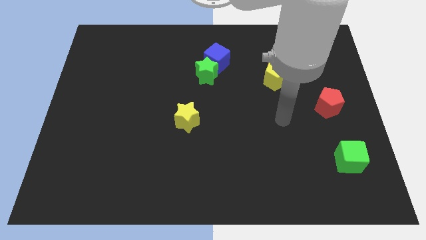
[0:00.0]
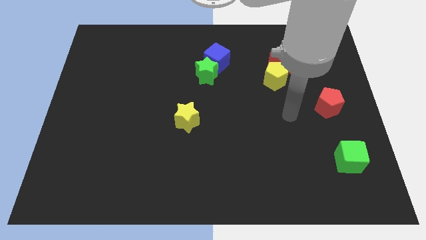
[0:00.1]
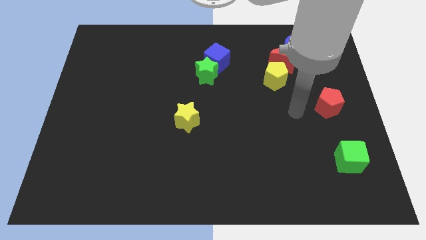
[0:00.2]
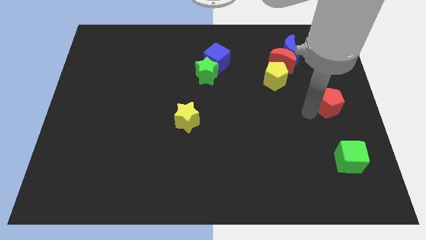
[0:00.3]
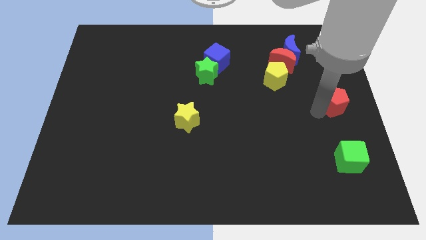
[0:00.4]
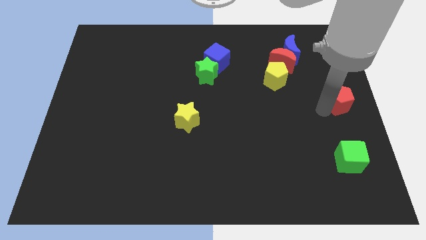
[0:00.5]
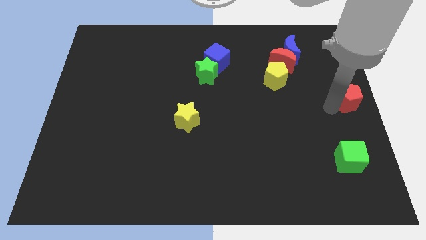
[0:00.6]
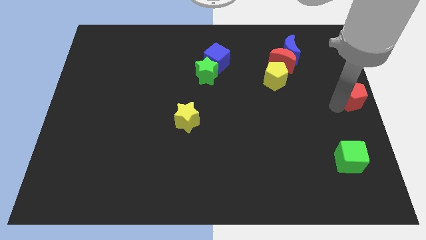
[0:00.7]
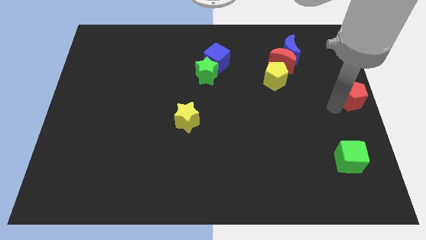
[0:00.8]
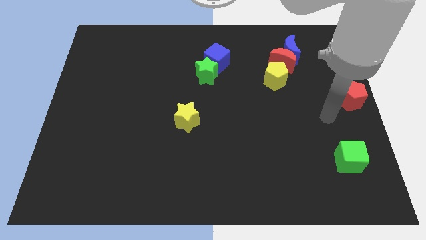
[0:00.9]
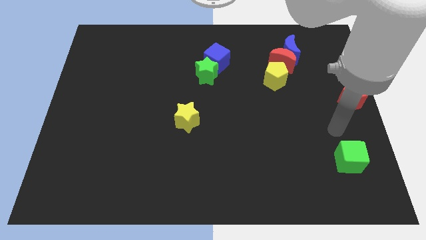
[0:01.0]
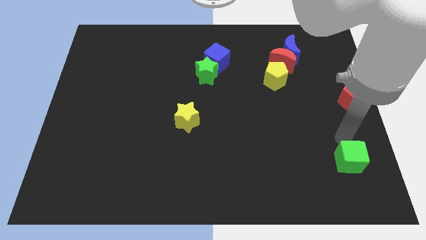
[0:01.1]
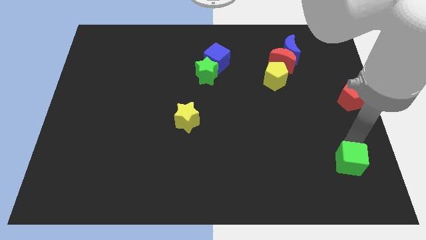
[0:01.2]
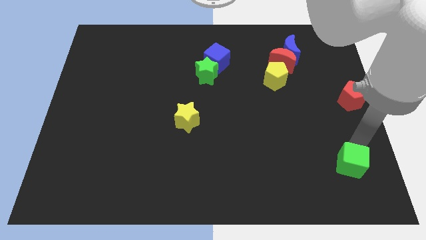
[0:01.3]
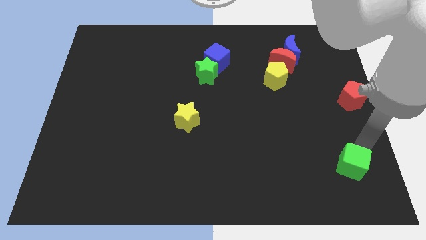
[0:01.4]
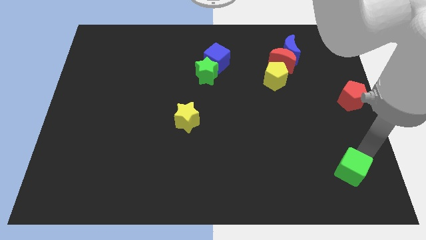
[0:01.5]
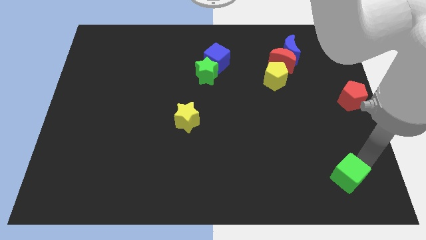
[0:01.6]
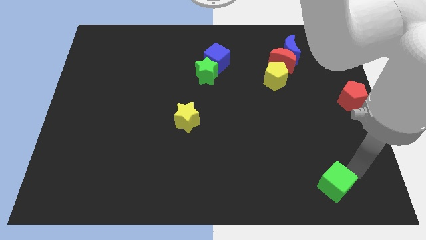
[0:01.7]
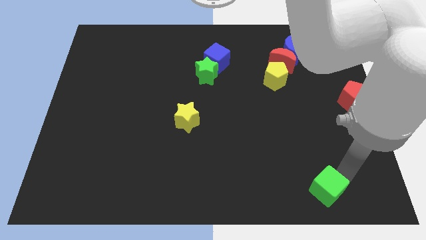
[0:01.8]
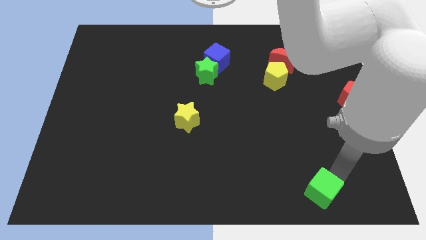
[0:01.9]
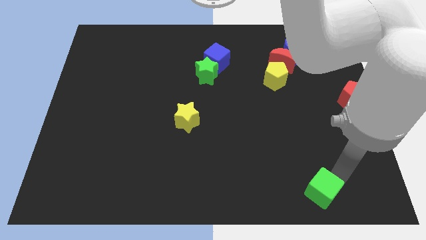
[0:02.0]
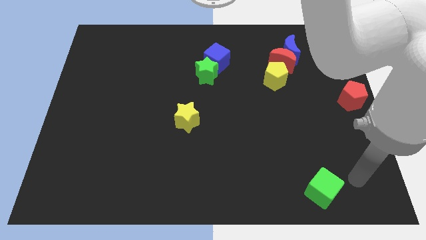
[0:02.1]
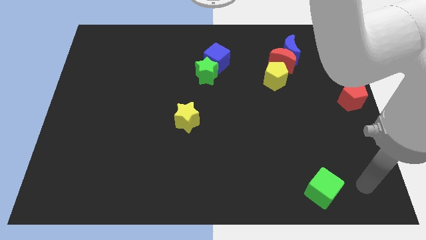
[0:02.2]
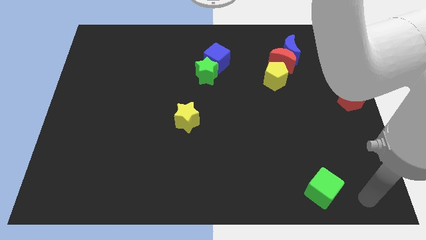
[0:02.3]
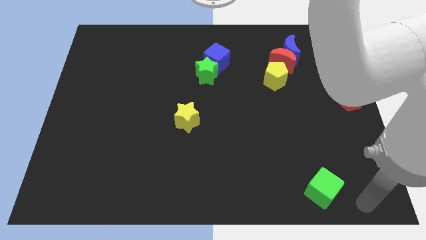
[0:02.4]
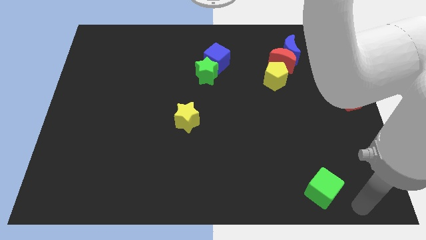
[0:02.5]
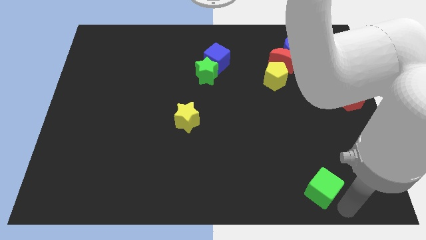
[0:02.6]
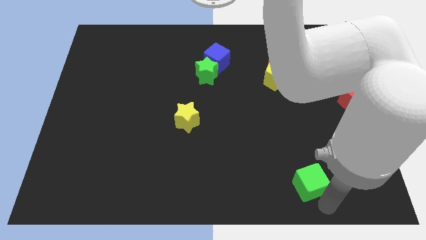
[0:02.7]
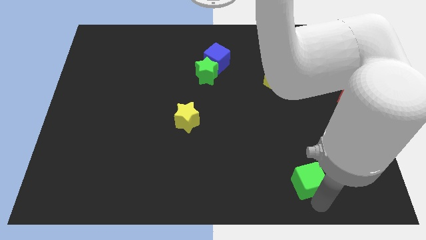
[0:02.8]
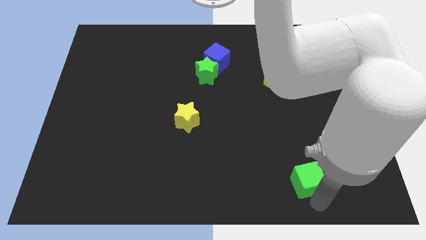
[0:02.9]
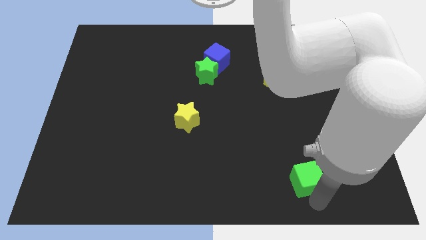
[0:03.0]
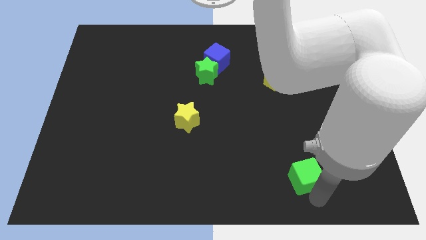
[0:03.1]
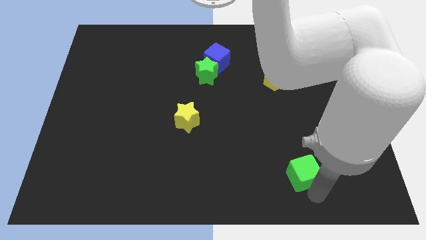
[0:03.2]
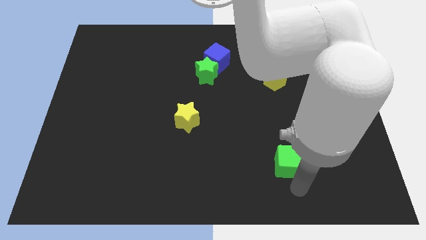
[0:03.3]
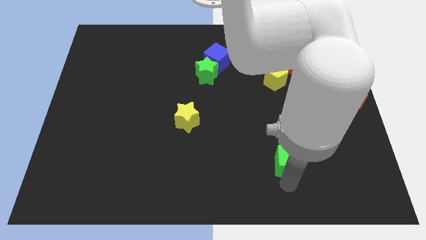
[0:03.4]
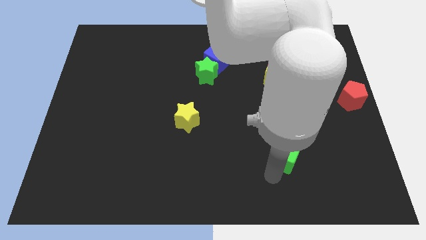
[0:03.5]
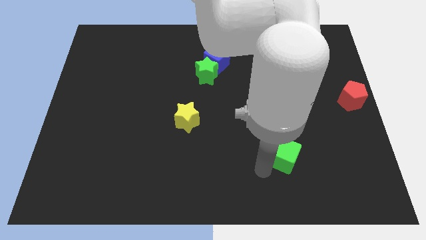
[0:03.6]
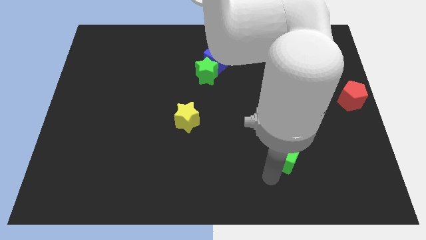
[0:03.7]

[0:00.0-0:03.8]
place the green cube diagonal to the yellow star

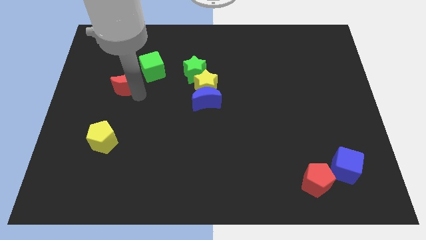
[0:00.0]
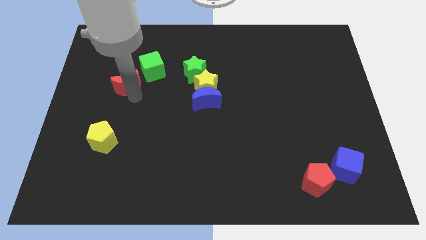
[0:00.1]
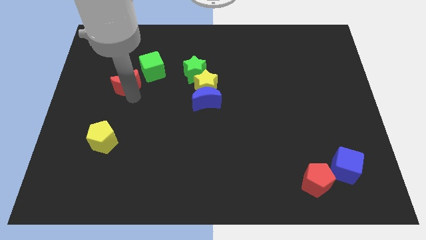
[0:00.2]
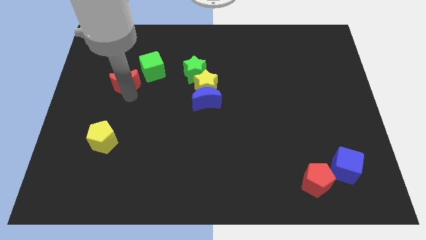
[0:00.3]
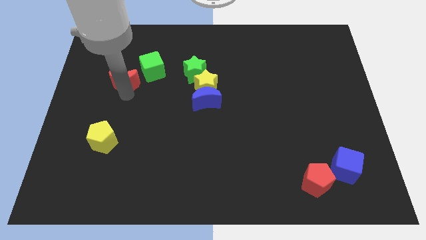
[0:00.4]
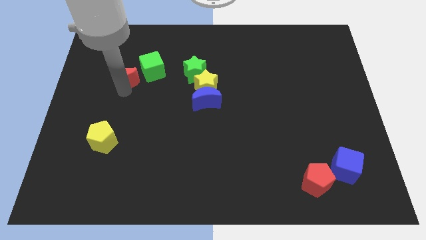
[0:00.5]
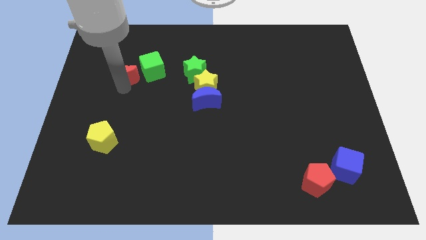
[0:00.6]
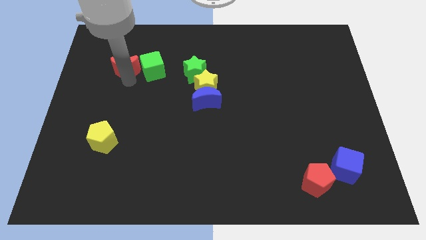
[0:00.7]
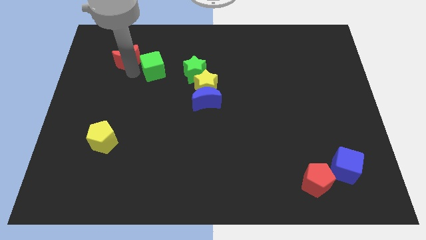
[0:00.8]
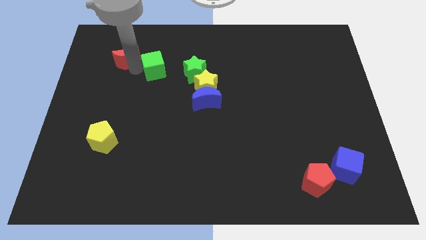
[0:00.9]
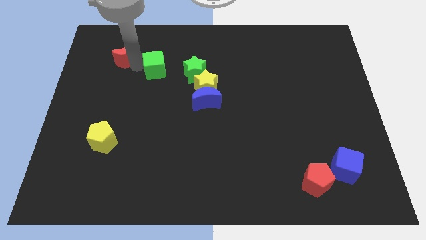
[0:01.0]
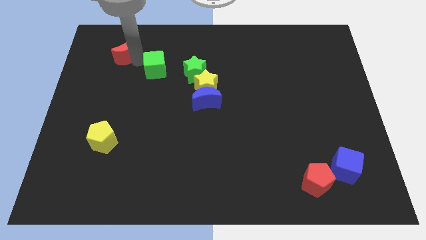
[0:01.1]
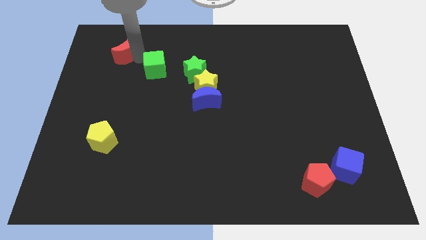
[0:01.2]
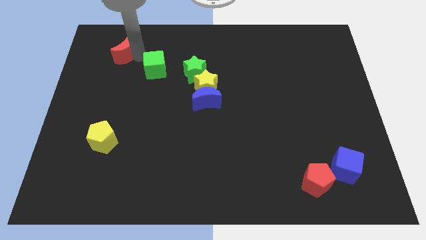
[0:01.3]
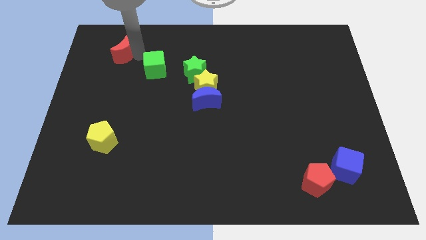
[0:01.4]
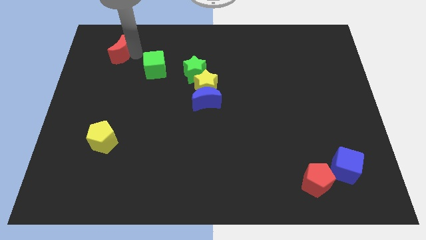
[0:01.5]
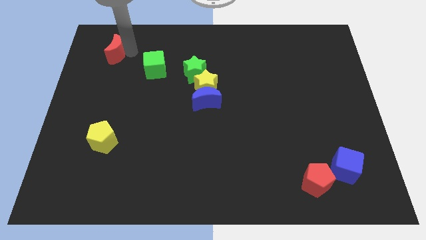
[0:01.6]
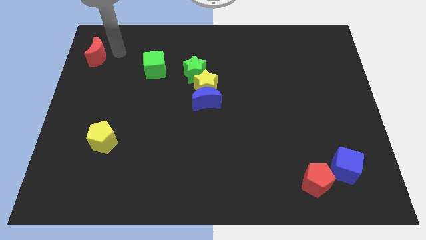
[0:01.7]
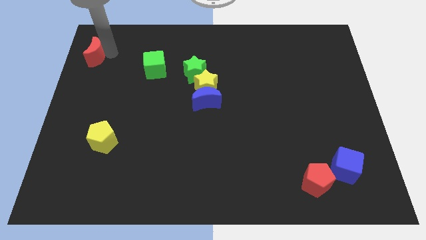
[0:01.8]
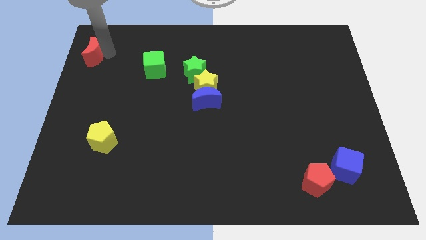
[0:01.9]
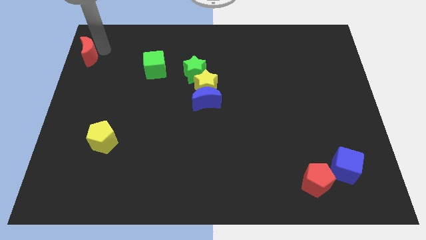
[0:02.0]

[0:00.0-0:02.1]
place the red crescent to the left green cube

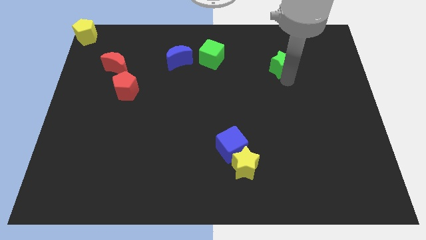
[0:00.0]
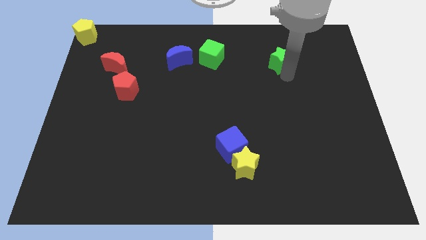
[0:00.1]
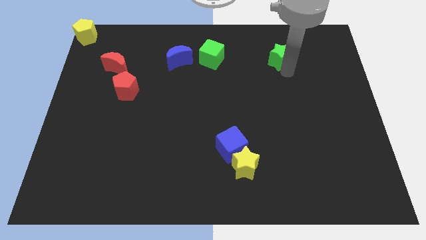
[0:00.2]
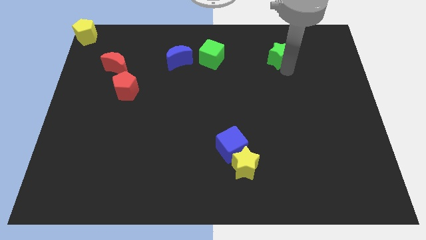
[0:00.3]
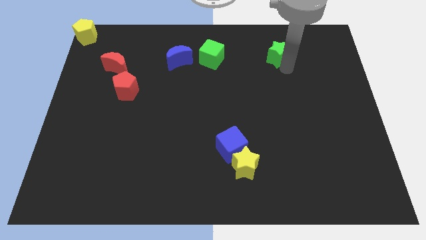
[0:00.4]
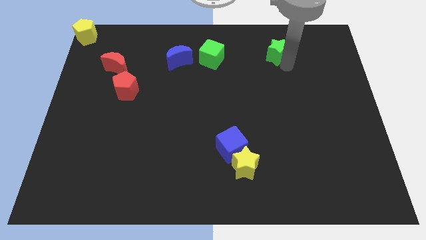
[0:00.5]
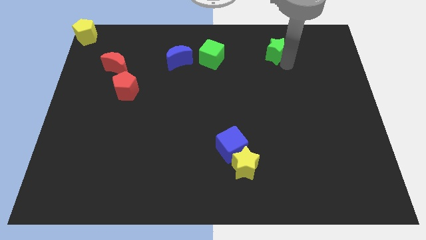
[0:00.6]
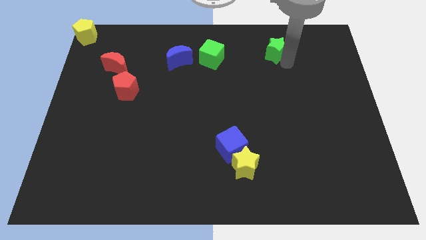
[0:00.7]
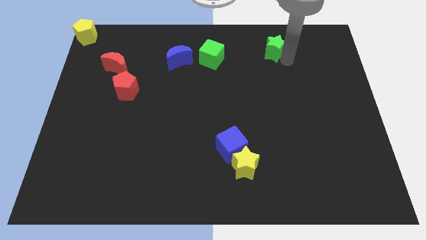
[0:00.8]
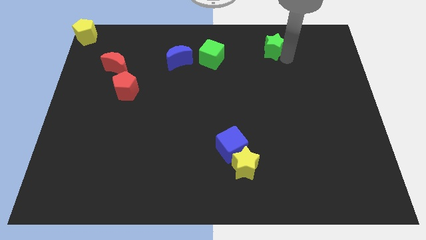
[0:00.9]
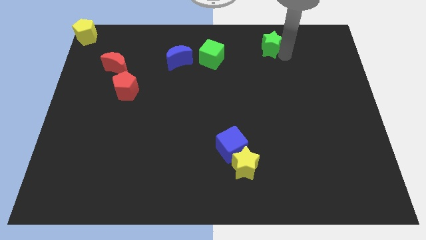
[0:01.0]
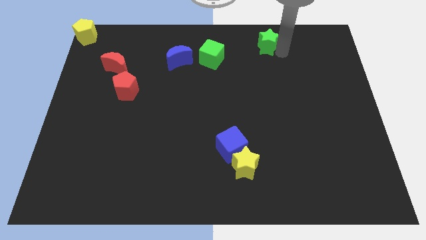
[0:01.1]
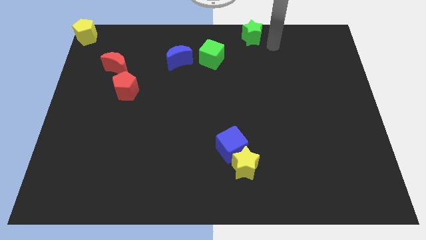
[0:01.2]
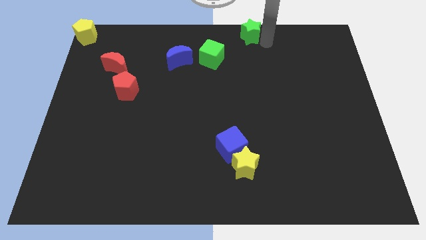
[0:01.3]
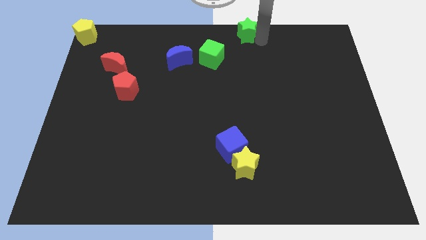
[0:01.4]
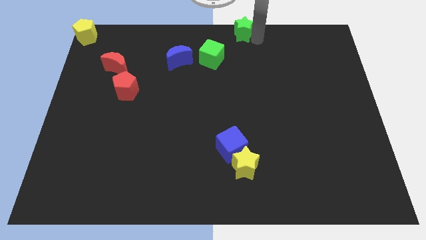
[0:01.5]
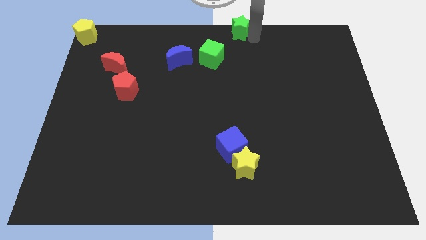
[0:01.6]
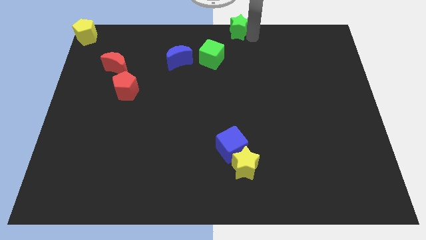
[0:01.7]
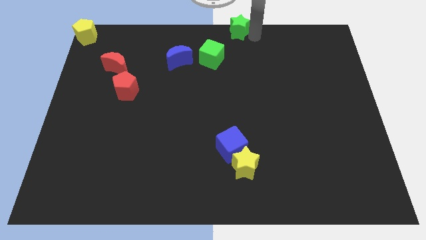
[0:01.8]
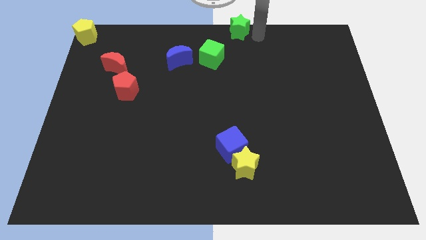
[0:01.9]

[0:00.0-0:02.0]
push green star towards top middle of the board

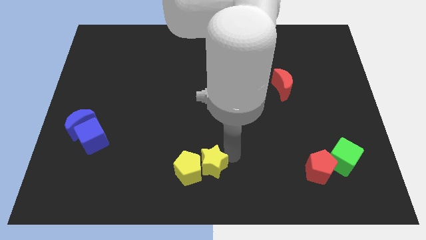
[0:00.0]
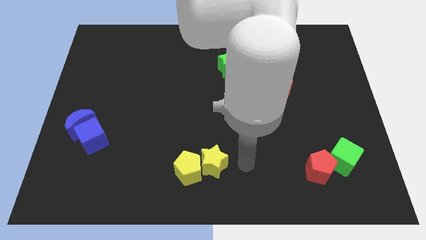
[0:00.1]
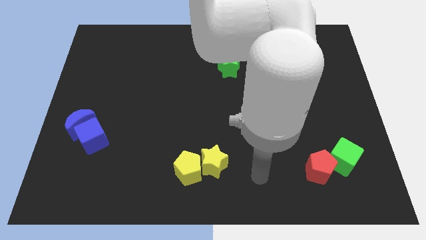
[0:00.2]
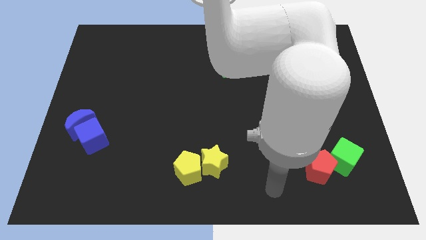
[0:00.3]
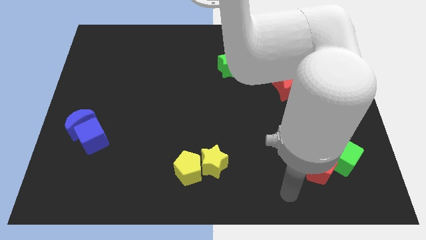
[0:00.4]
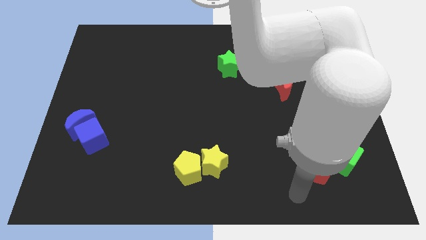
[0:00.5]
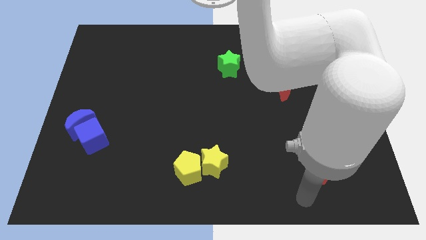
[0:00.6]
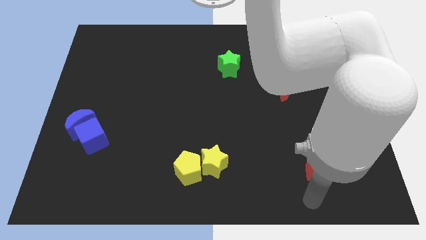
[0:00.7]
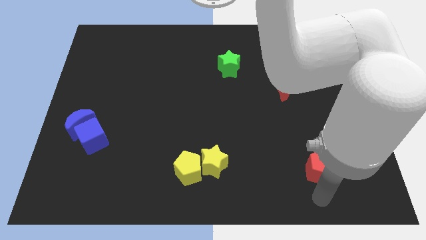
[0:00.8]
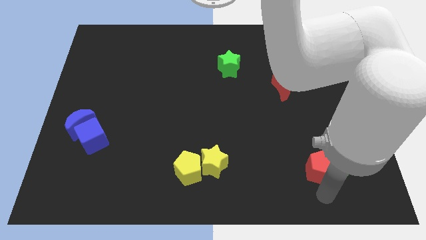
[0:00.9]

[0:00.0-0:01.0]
place your arm at the bottom of the red pentagon

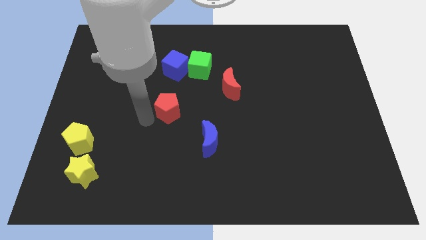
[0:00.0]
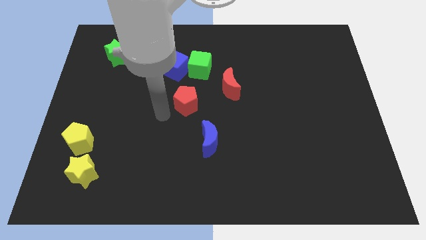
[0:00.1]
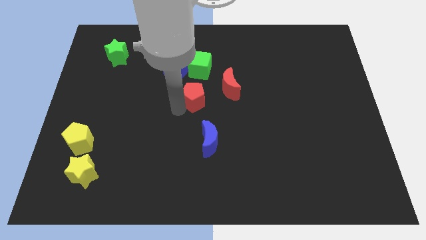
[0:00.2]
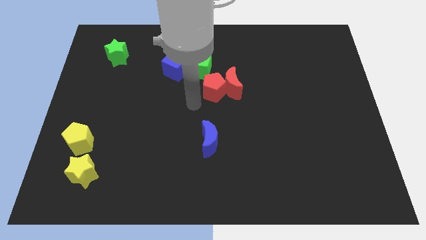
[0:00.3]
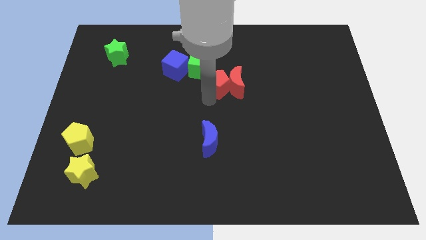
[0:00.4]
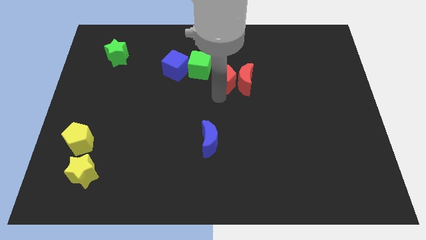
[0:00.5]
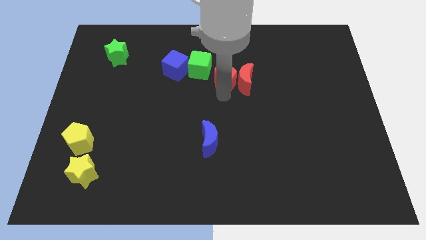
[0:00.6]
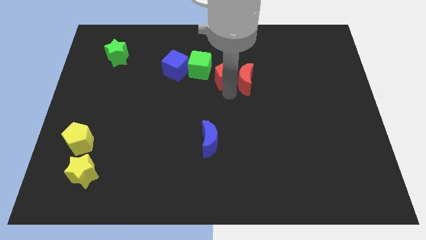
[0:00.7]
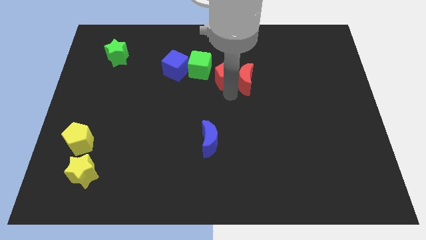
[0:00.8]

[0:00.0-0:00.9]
push red pentagon into the red moon
